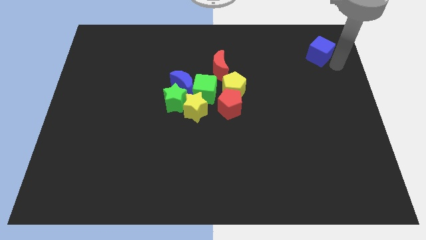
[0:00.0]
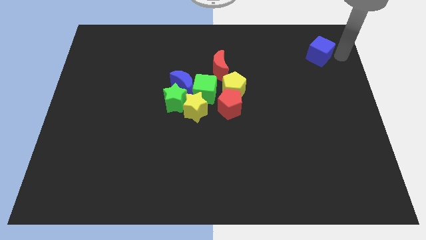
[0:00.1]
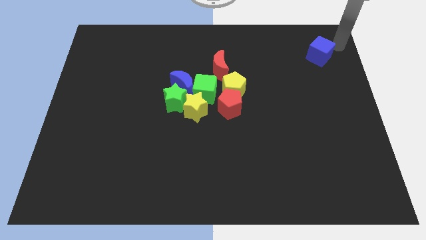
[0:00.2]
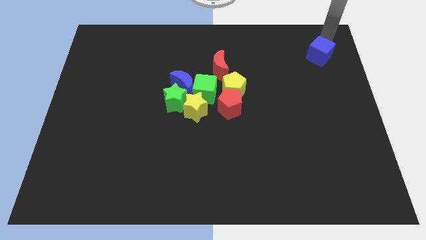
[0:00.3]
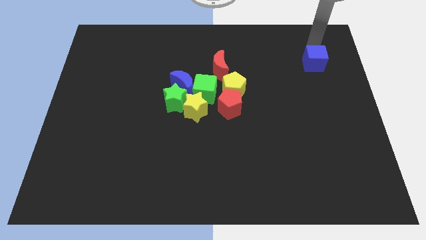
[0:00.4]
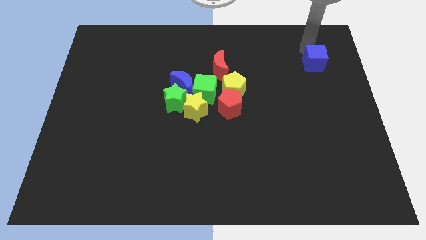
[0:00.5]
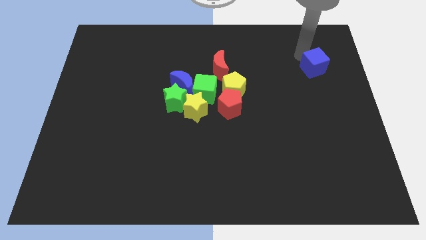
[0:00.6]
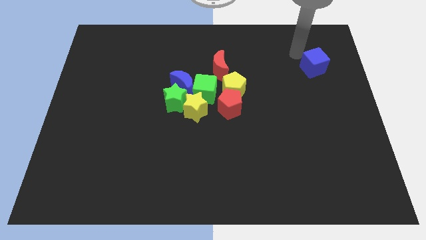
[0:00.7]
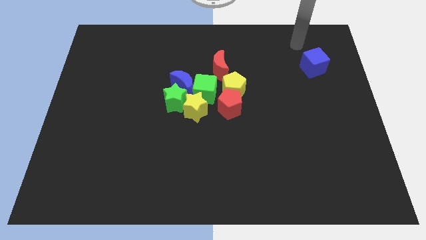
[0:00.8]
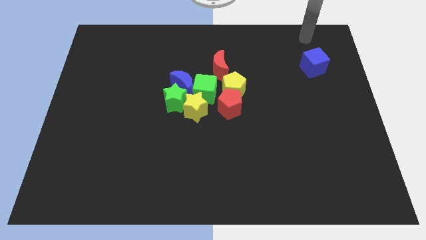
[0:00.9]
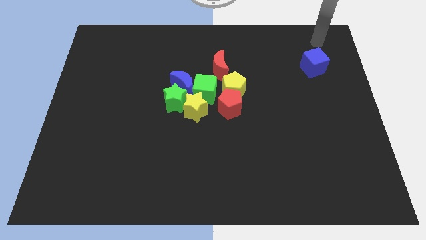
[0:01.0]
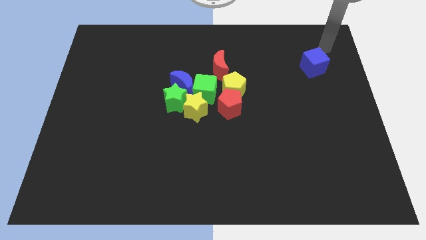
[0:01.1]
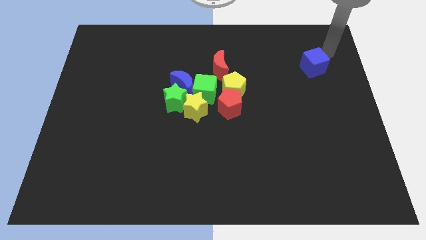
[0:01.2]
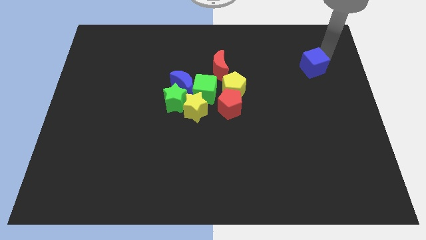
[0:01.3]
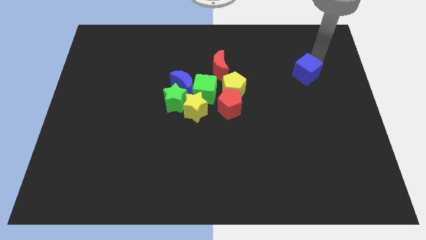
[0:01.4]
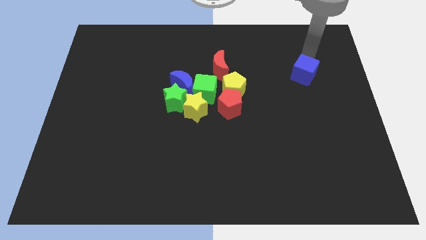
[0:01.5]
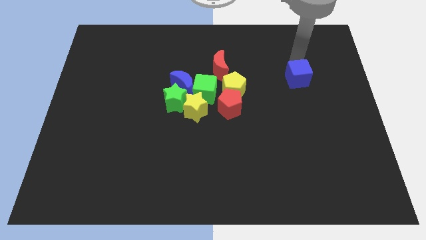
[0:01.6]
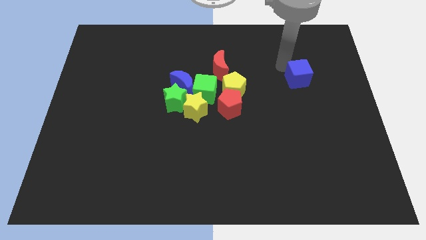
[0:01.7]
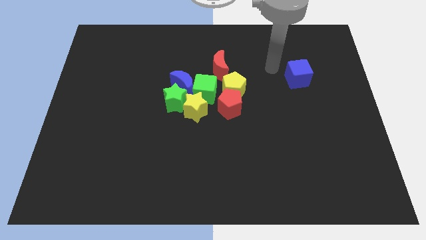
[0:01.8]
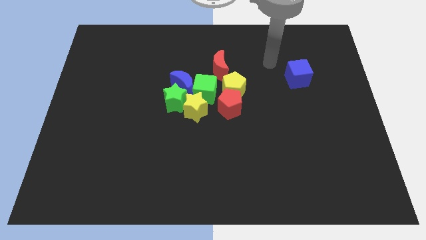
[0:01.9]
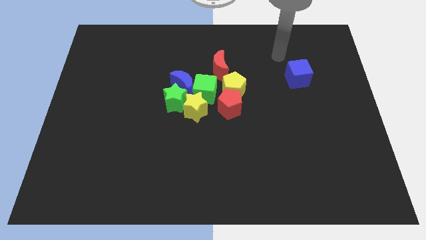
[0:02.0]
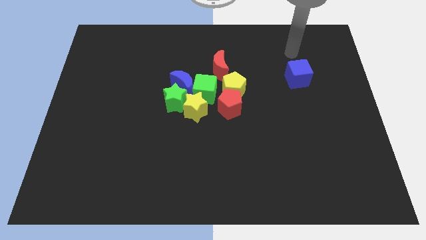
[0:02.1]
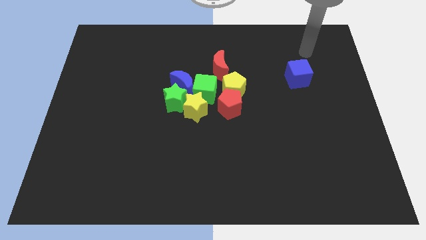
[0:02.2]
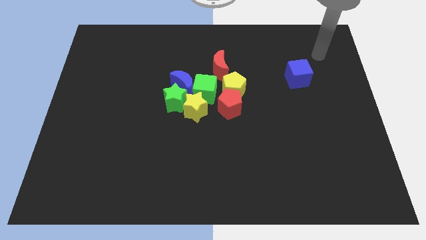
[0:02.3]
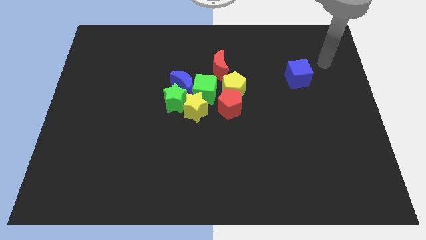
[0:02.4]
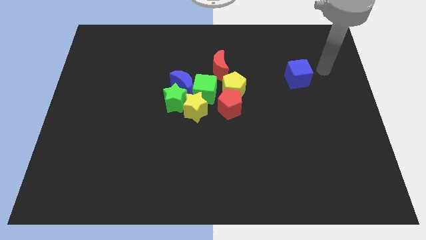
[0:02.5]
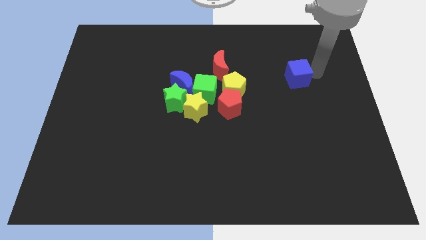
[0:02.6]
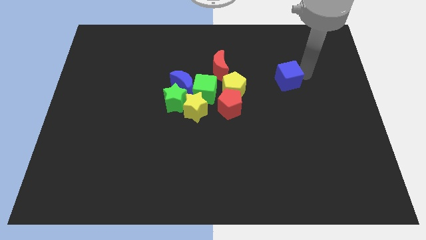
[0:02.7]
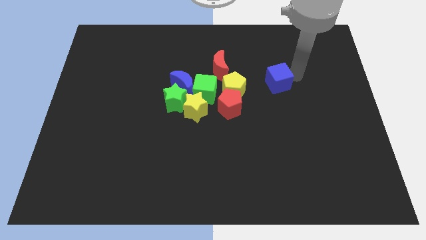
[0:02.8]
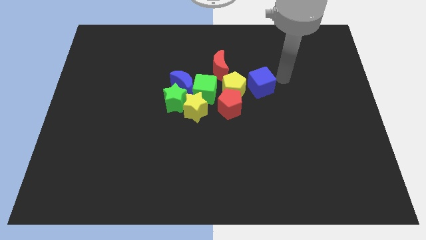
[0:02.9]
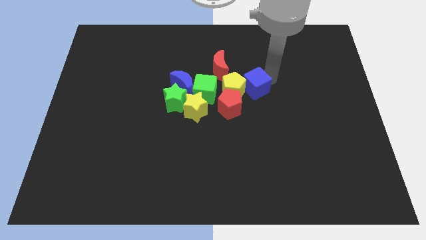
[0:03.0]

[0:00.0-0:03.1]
add the blue cube to the right of yellow pentagon

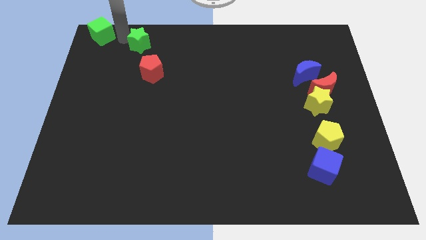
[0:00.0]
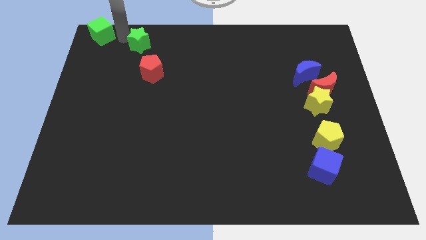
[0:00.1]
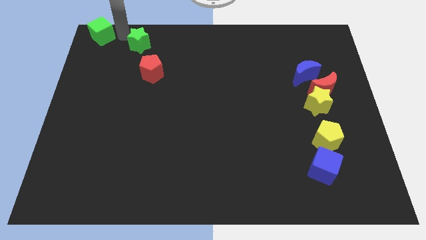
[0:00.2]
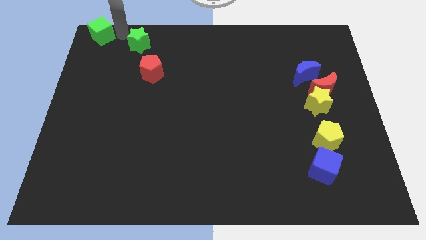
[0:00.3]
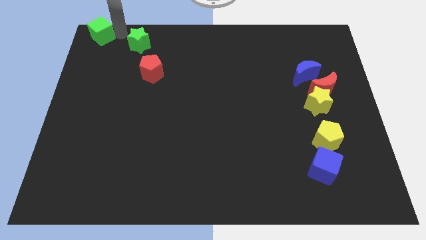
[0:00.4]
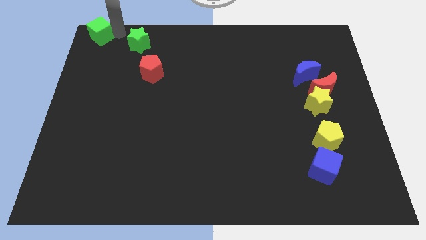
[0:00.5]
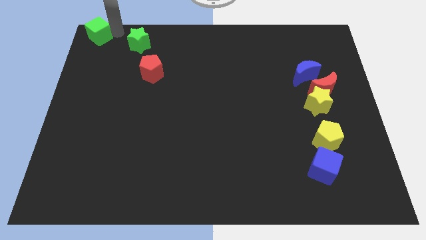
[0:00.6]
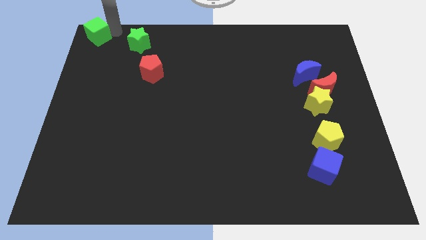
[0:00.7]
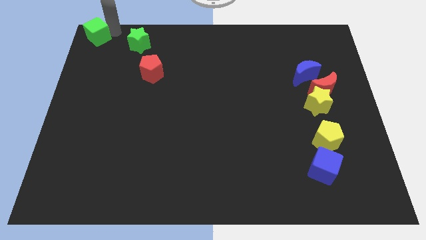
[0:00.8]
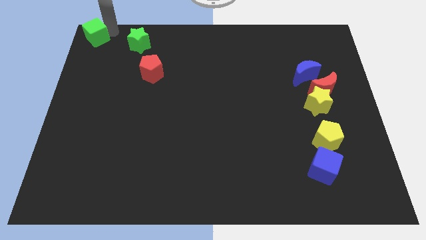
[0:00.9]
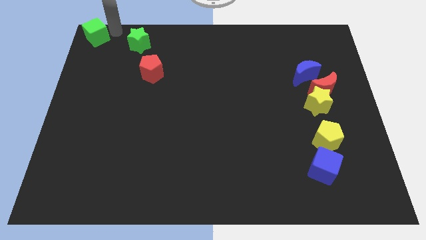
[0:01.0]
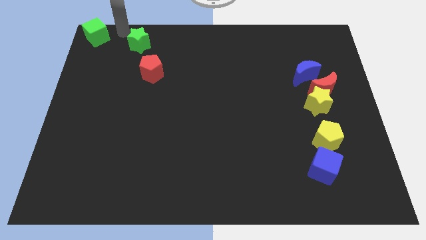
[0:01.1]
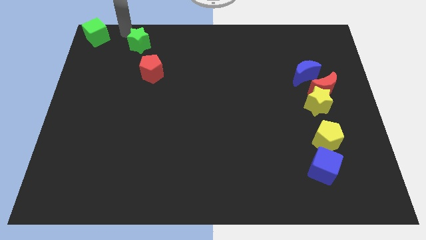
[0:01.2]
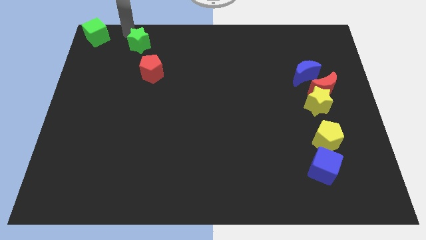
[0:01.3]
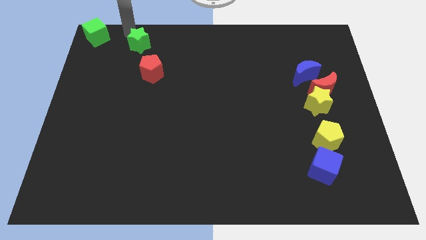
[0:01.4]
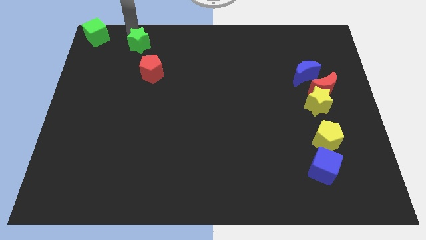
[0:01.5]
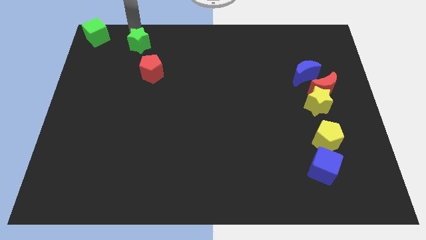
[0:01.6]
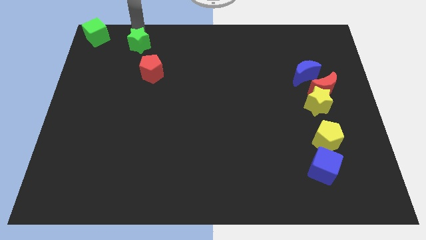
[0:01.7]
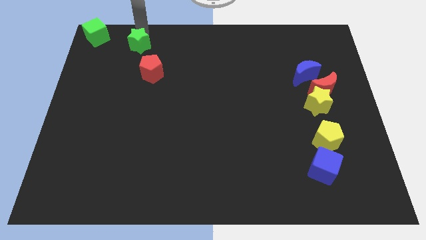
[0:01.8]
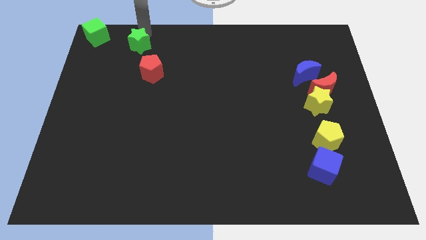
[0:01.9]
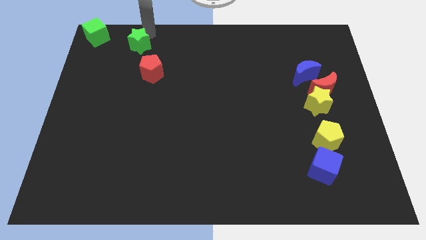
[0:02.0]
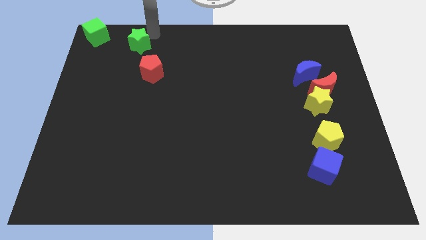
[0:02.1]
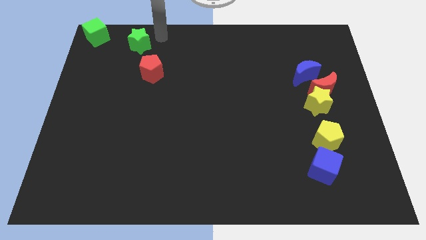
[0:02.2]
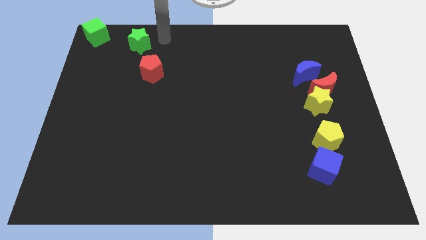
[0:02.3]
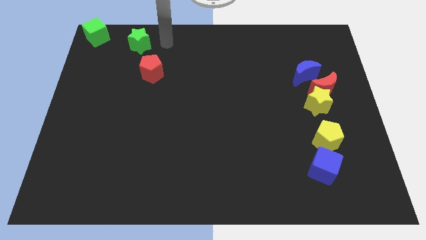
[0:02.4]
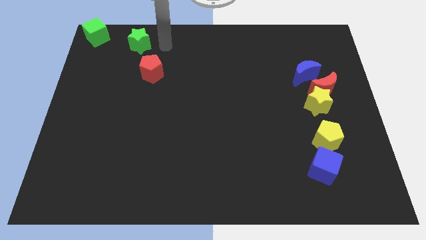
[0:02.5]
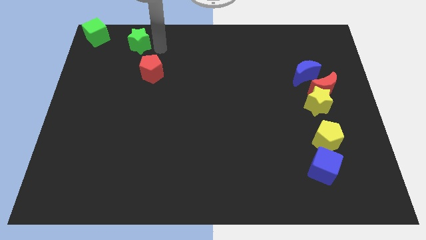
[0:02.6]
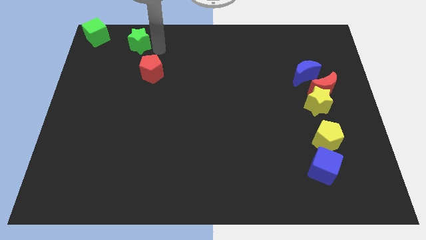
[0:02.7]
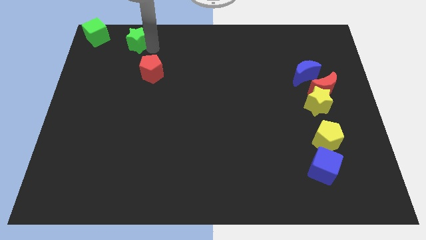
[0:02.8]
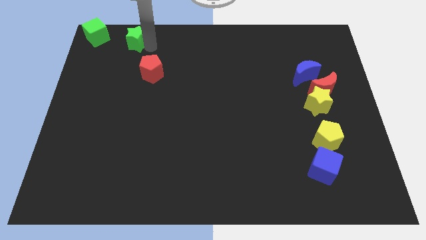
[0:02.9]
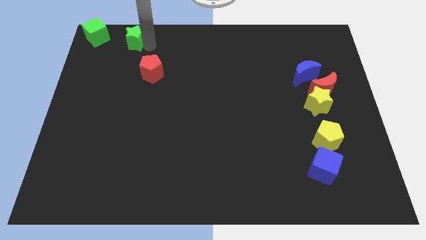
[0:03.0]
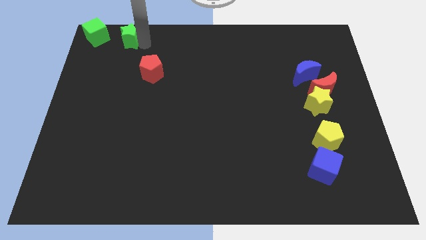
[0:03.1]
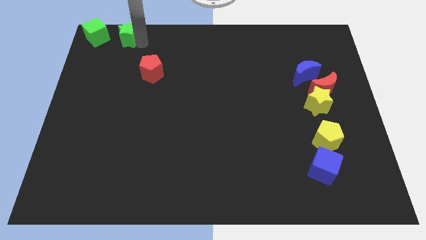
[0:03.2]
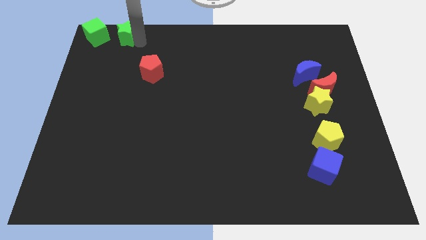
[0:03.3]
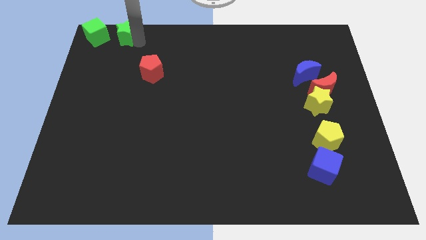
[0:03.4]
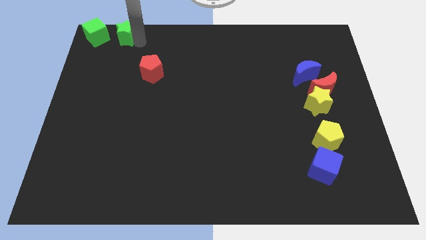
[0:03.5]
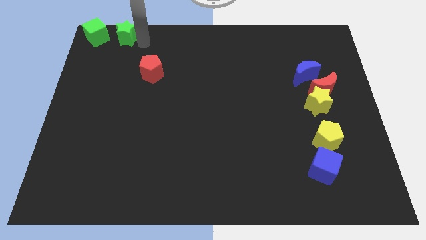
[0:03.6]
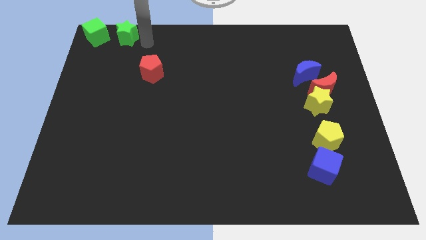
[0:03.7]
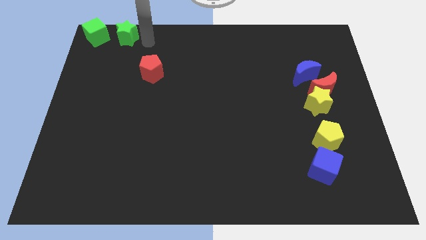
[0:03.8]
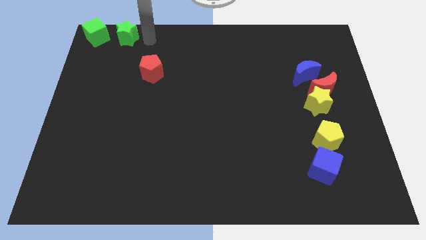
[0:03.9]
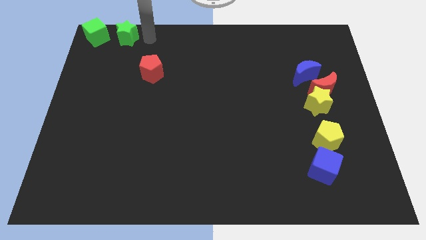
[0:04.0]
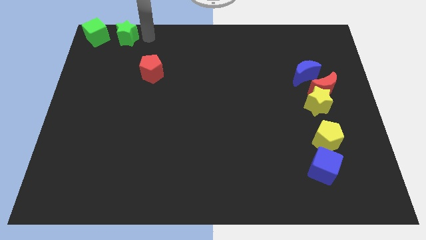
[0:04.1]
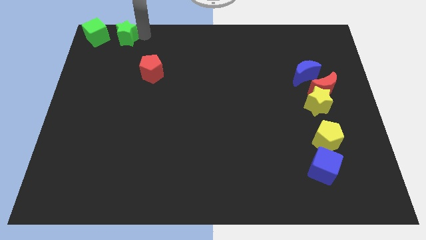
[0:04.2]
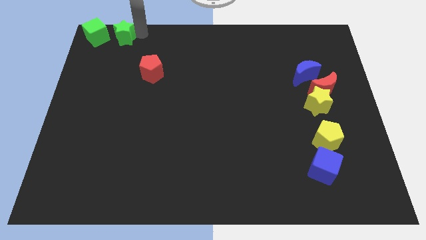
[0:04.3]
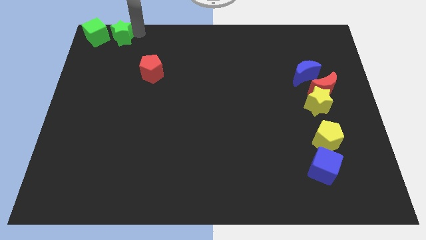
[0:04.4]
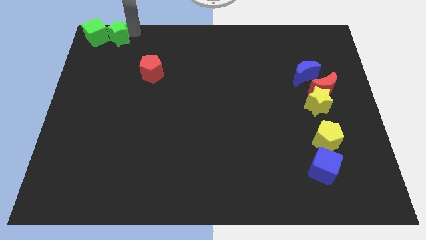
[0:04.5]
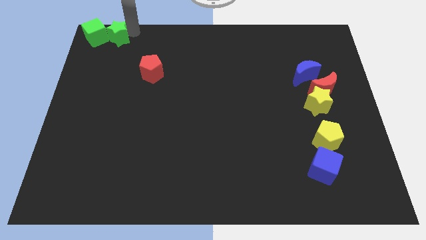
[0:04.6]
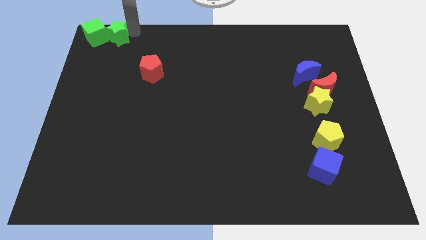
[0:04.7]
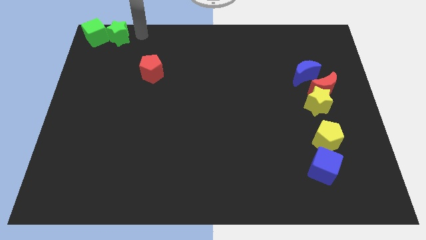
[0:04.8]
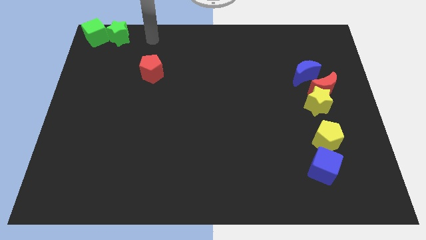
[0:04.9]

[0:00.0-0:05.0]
move green star and green cube towards the top left of the board

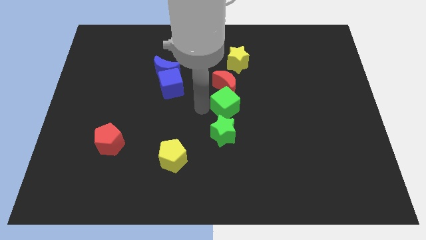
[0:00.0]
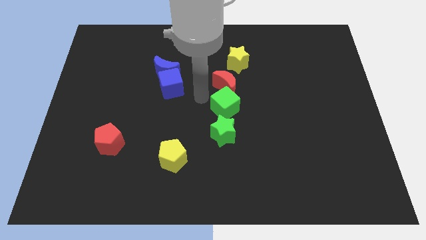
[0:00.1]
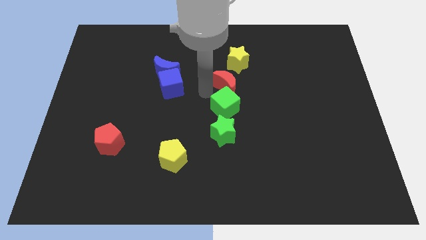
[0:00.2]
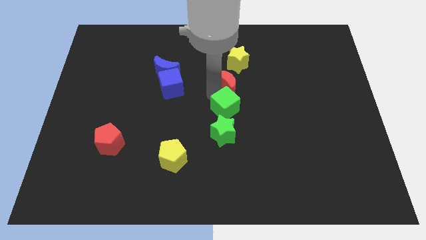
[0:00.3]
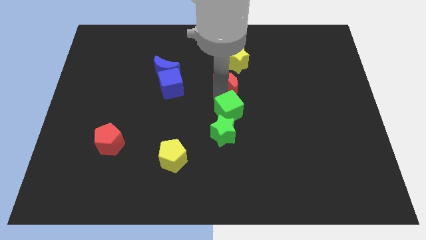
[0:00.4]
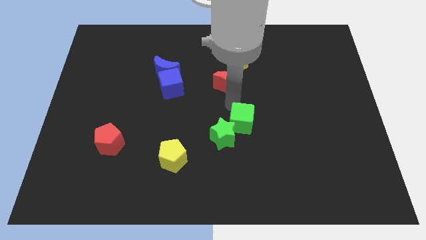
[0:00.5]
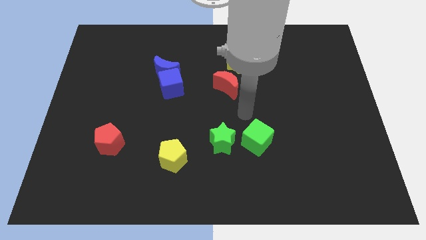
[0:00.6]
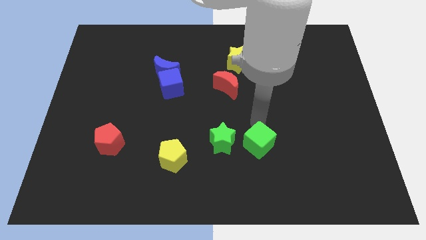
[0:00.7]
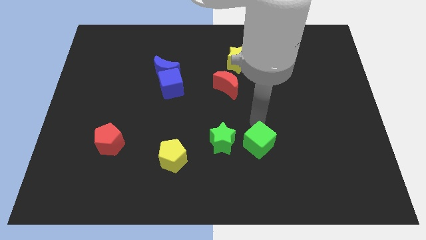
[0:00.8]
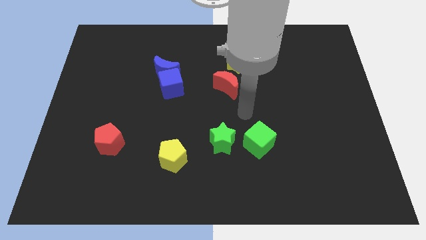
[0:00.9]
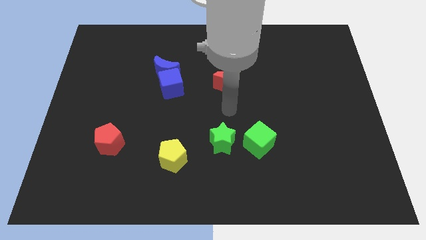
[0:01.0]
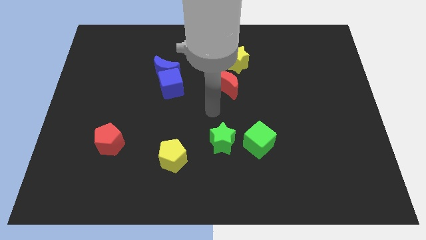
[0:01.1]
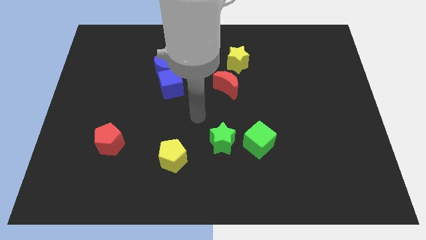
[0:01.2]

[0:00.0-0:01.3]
push the green cube into the green star
